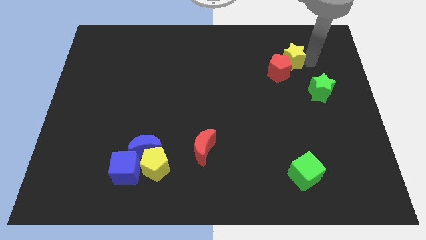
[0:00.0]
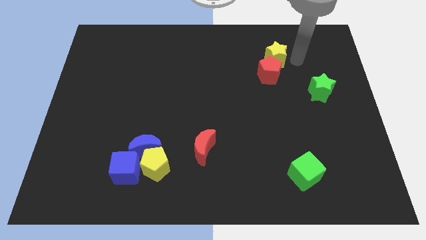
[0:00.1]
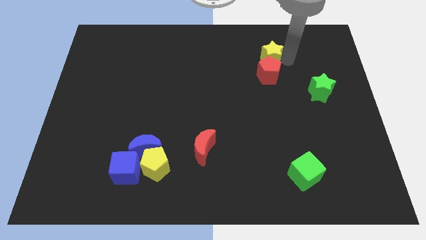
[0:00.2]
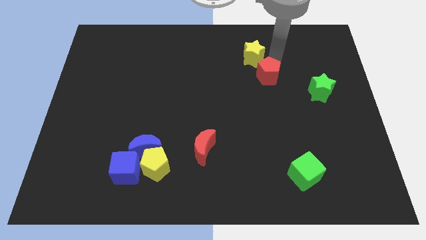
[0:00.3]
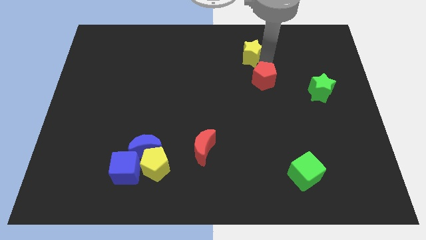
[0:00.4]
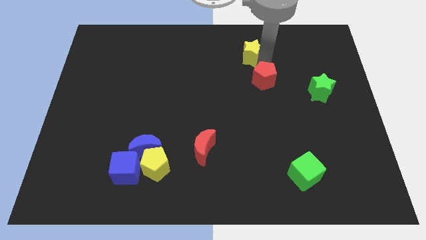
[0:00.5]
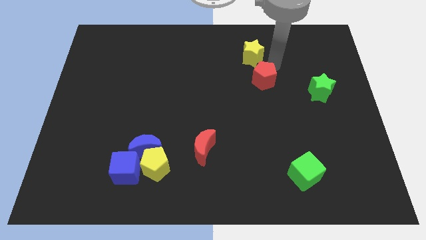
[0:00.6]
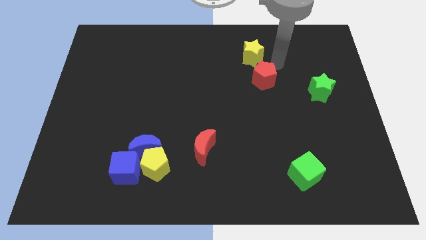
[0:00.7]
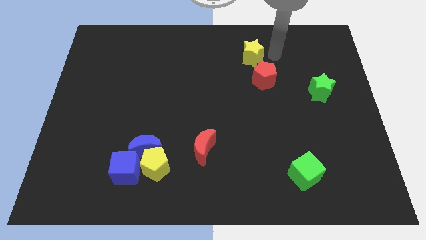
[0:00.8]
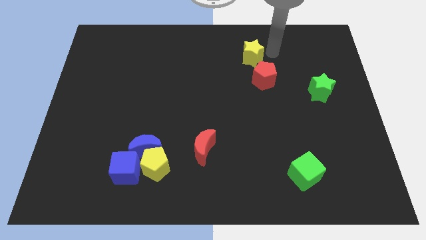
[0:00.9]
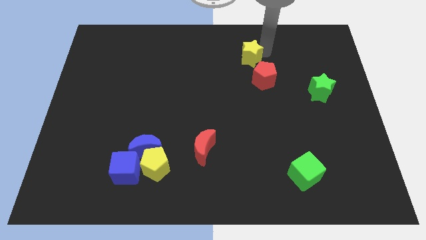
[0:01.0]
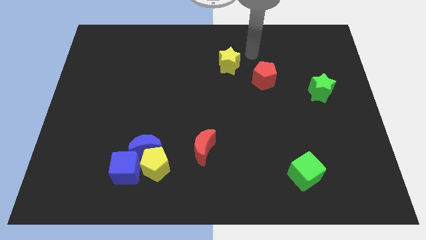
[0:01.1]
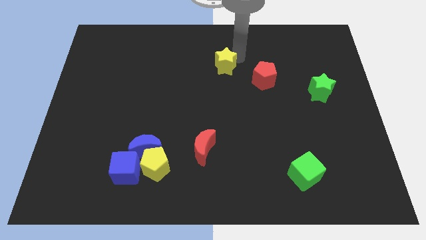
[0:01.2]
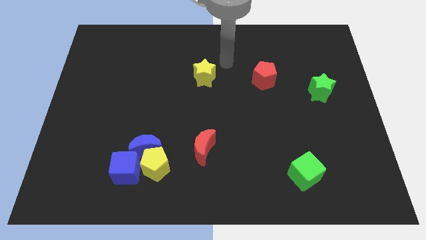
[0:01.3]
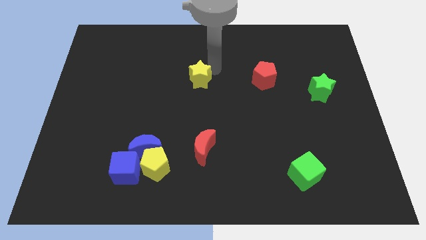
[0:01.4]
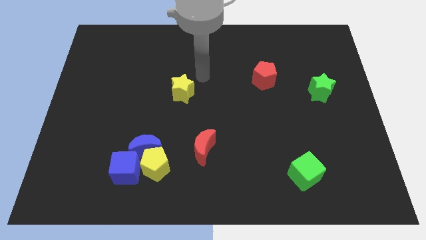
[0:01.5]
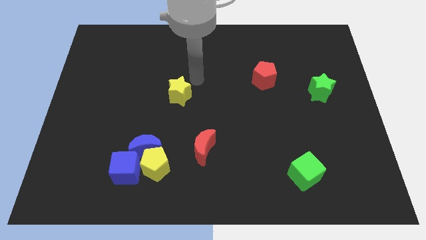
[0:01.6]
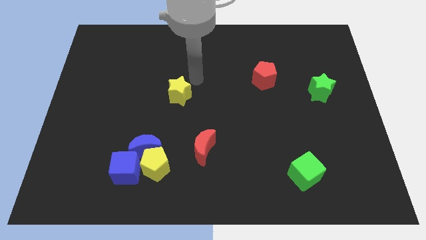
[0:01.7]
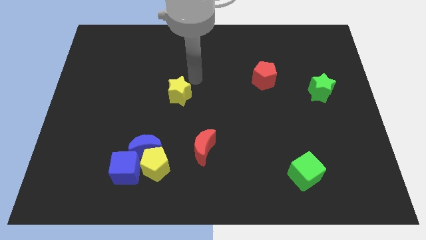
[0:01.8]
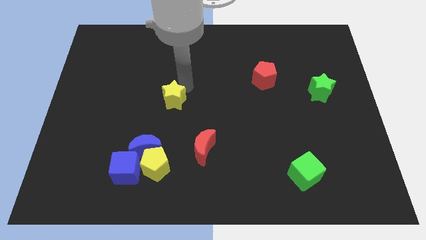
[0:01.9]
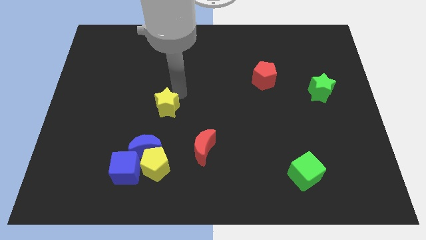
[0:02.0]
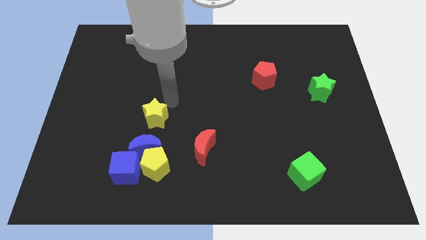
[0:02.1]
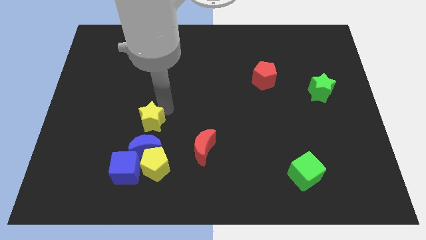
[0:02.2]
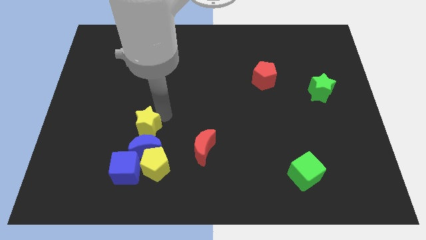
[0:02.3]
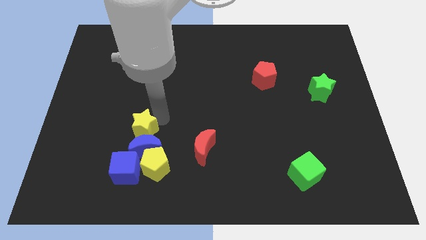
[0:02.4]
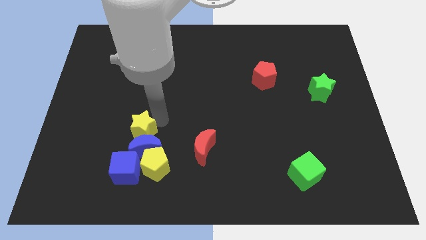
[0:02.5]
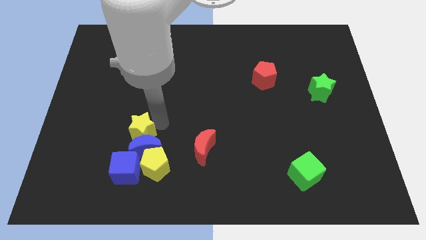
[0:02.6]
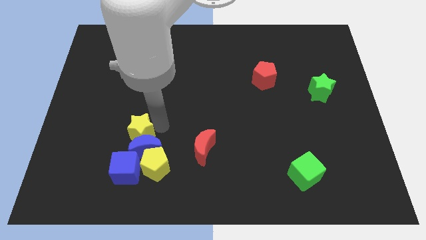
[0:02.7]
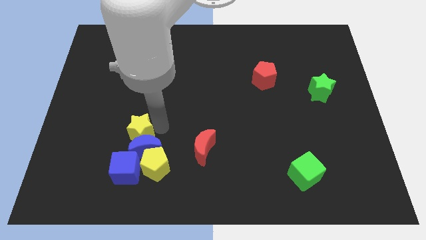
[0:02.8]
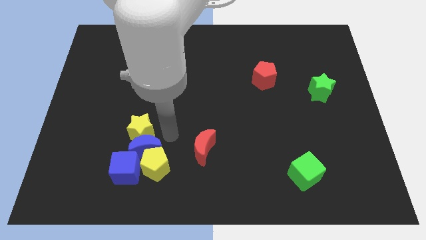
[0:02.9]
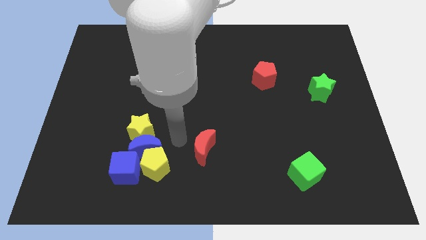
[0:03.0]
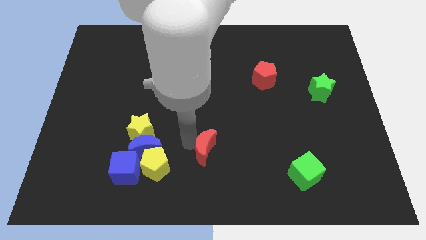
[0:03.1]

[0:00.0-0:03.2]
move the yellow star into the top side of the blue crescent

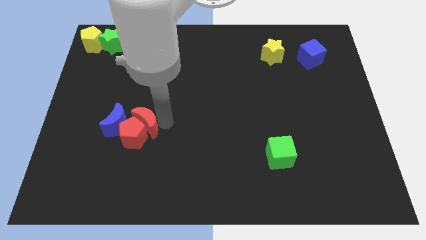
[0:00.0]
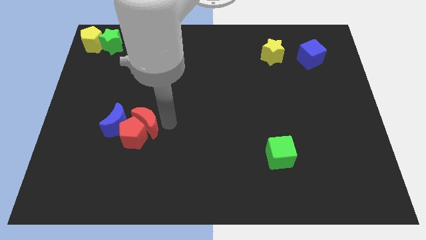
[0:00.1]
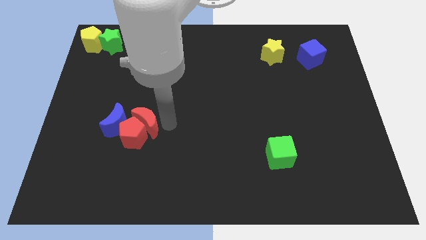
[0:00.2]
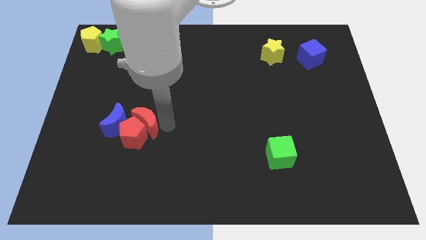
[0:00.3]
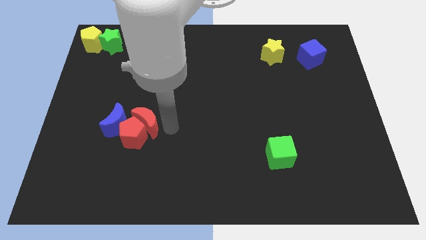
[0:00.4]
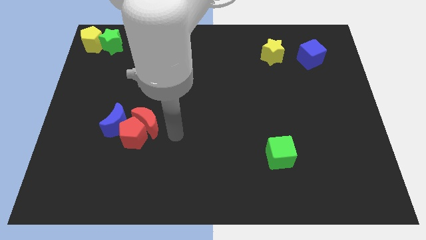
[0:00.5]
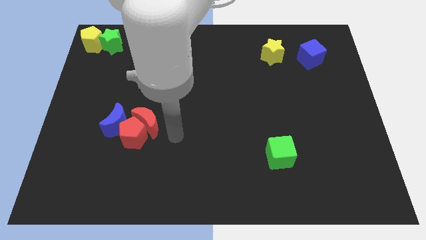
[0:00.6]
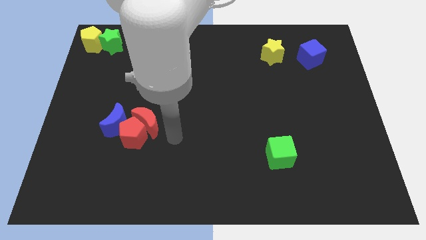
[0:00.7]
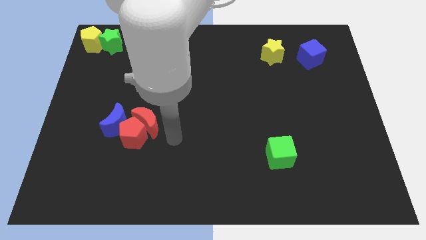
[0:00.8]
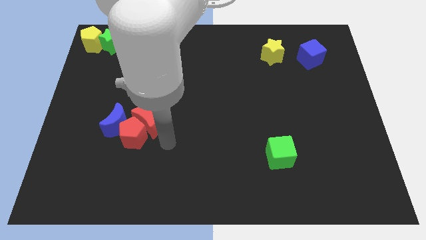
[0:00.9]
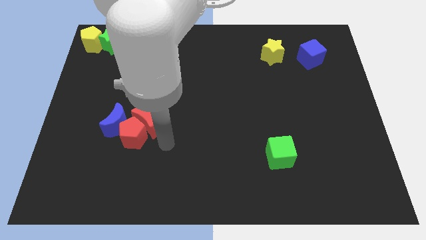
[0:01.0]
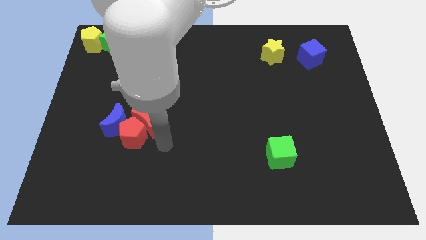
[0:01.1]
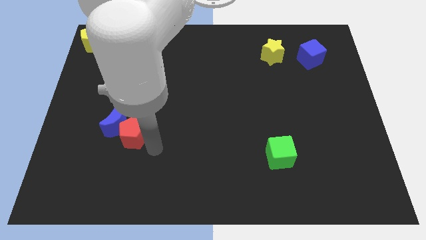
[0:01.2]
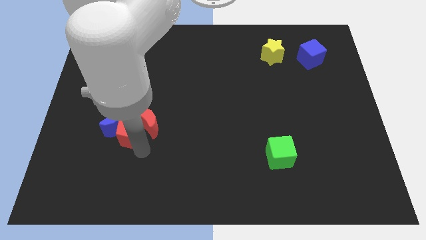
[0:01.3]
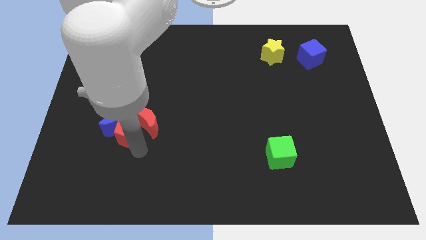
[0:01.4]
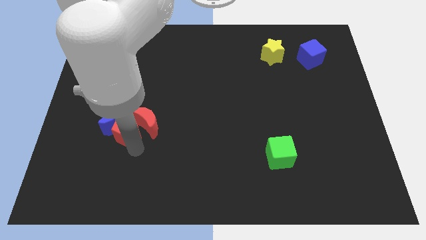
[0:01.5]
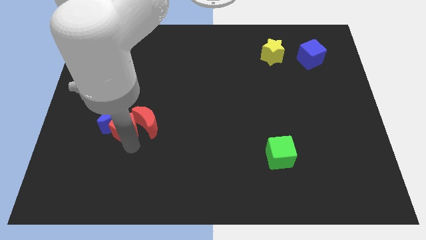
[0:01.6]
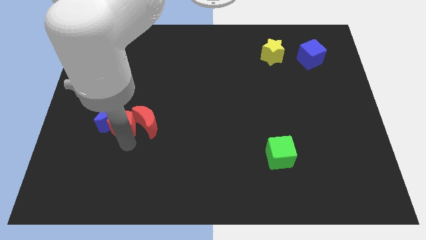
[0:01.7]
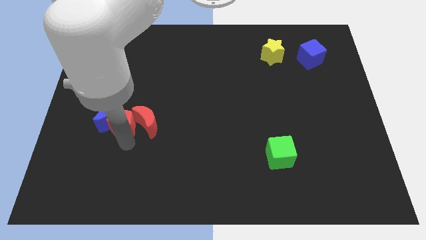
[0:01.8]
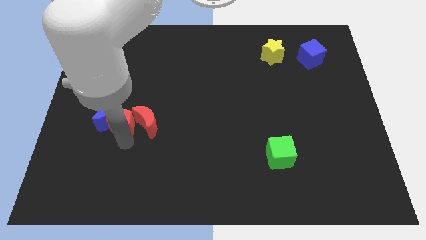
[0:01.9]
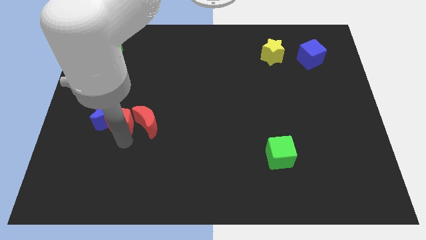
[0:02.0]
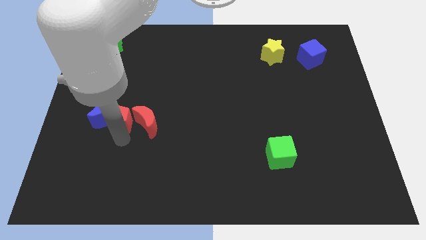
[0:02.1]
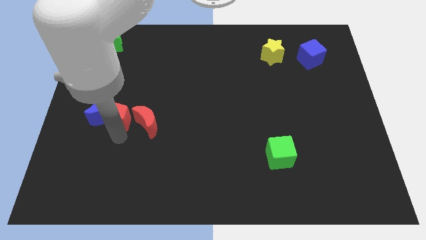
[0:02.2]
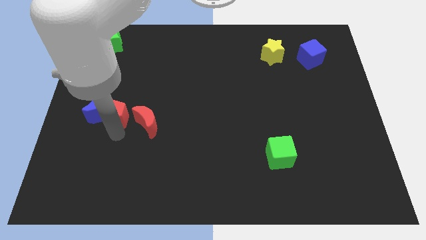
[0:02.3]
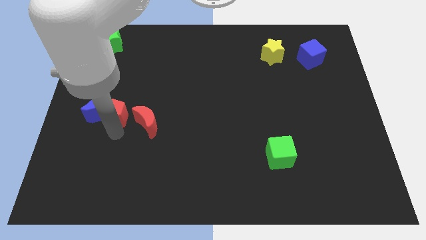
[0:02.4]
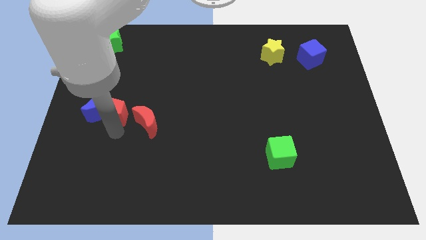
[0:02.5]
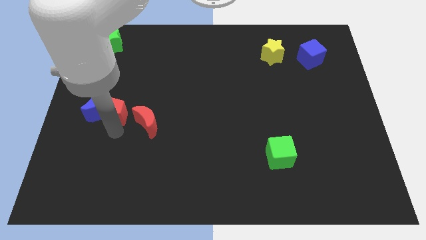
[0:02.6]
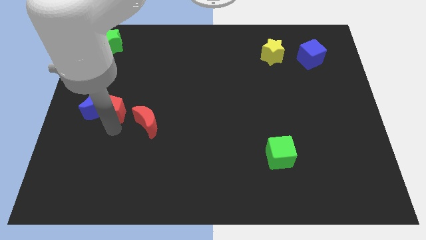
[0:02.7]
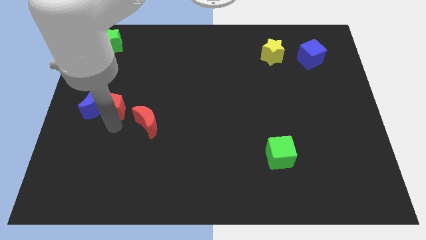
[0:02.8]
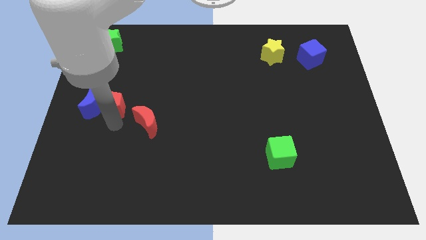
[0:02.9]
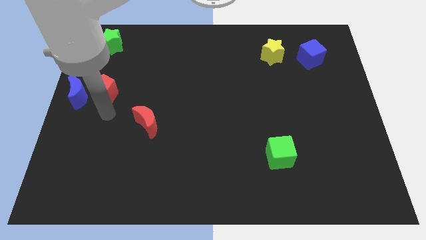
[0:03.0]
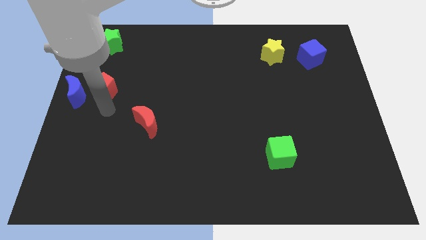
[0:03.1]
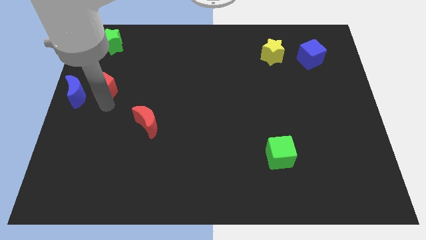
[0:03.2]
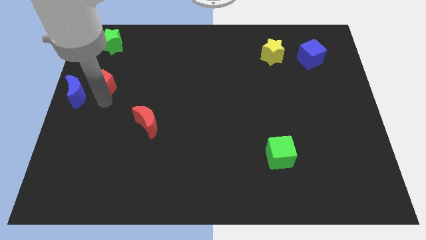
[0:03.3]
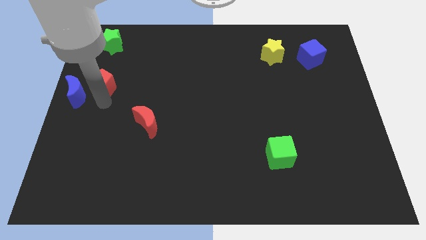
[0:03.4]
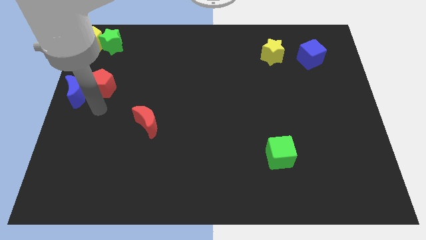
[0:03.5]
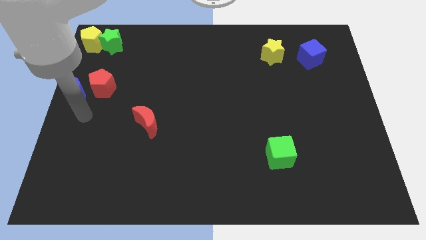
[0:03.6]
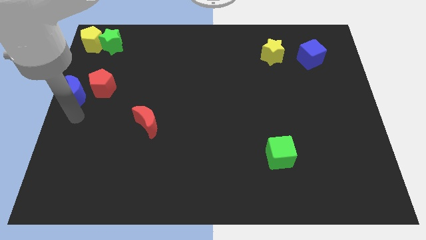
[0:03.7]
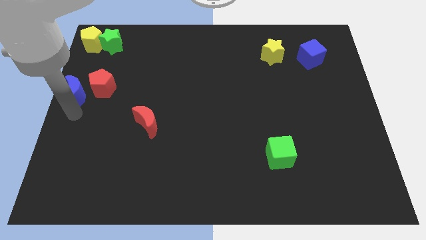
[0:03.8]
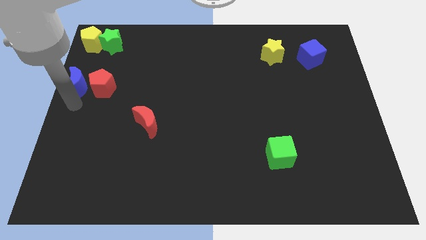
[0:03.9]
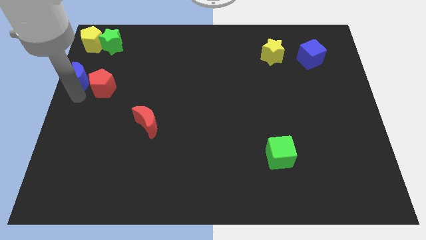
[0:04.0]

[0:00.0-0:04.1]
move the red pentagon into the blue moon

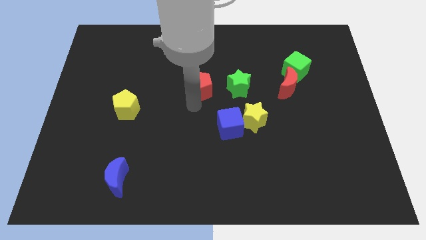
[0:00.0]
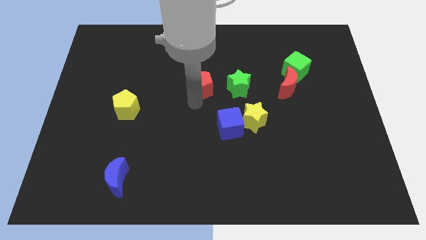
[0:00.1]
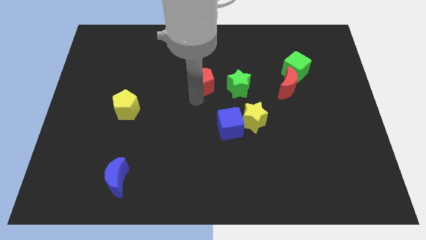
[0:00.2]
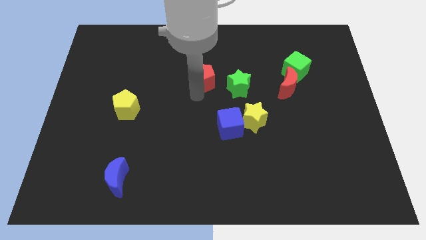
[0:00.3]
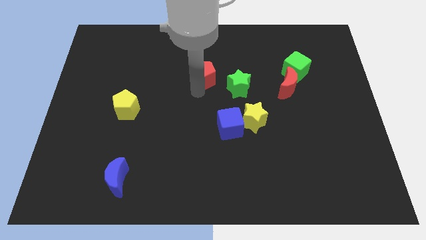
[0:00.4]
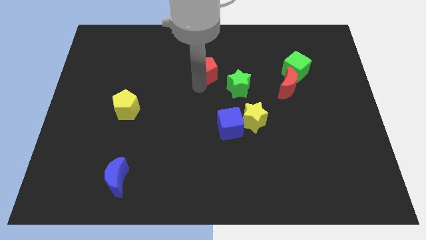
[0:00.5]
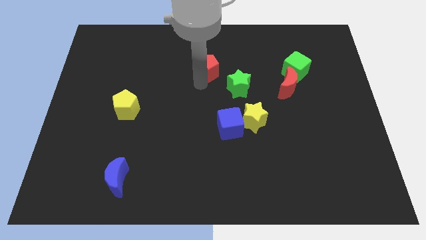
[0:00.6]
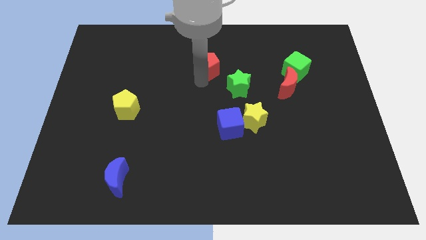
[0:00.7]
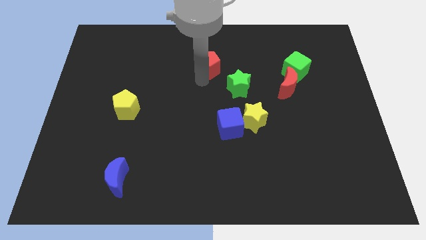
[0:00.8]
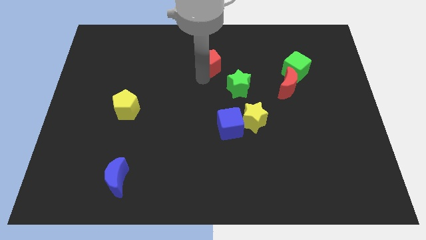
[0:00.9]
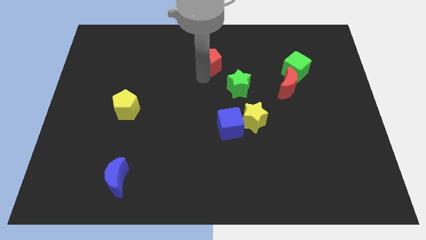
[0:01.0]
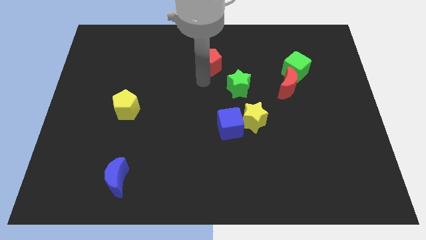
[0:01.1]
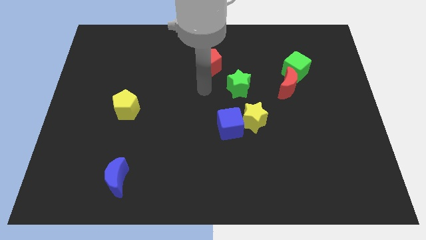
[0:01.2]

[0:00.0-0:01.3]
drag the red pentagon towards top center

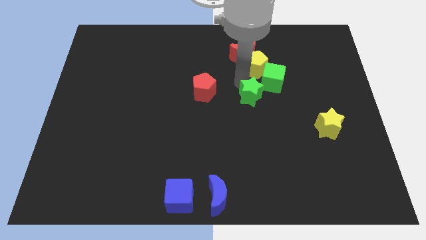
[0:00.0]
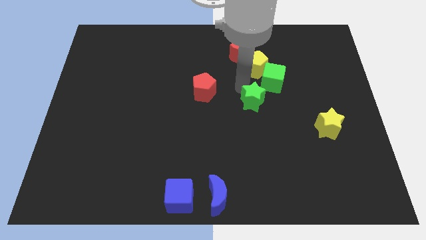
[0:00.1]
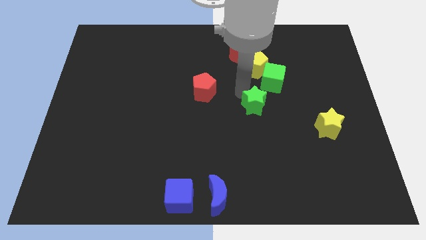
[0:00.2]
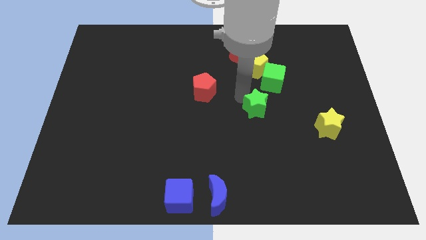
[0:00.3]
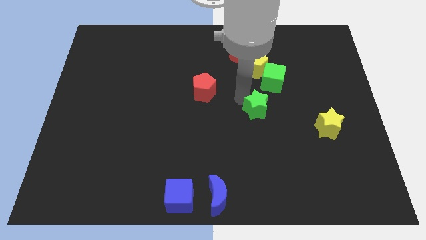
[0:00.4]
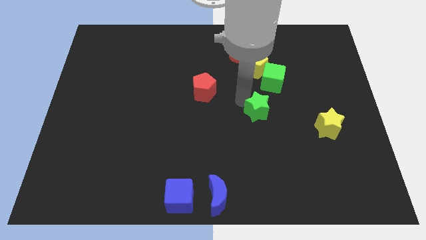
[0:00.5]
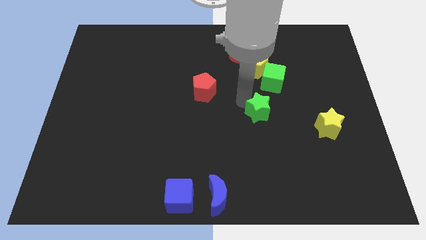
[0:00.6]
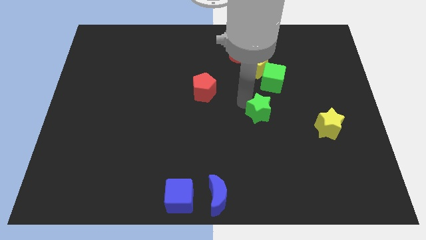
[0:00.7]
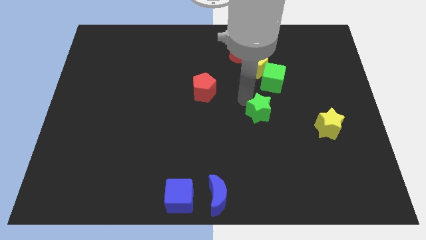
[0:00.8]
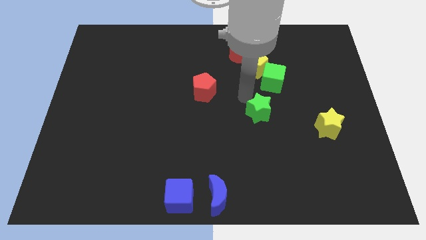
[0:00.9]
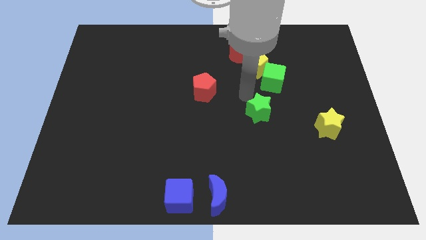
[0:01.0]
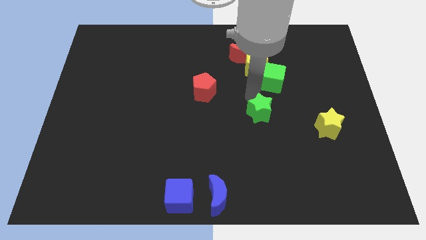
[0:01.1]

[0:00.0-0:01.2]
separate green star from green cube
